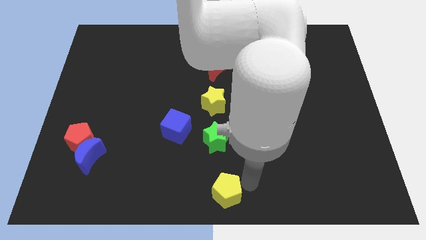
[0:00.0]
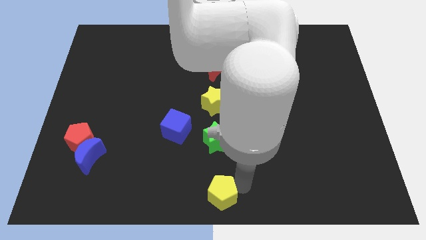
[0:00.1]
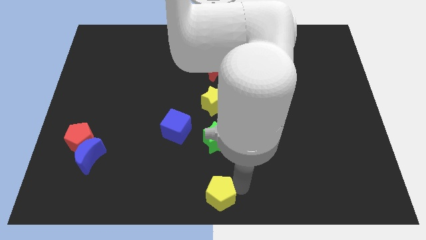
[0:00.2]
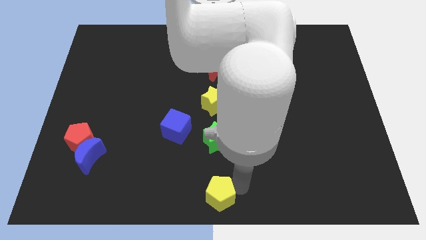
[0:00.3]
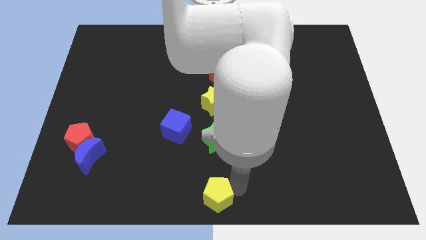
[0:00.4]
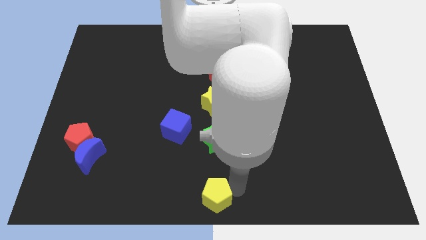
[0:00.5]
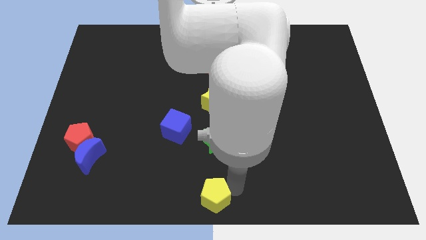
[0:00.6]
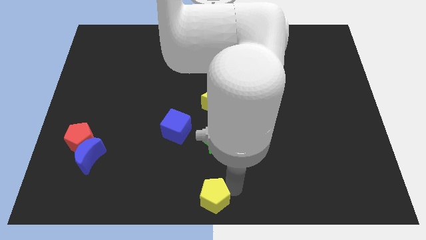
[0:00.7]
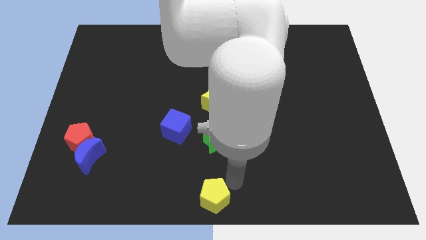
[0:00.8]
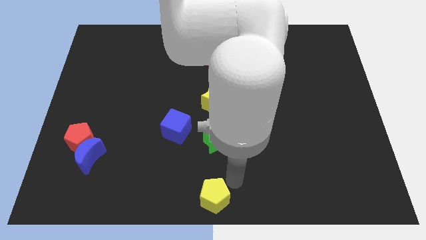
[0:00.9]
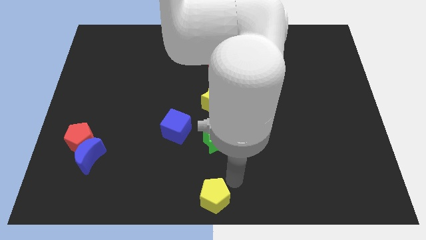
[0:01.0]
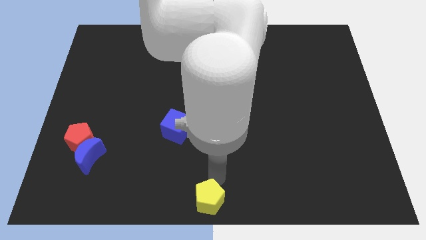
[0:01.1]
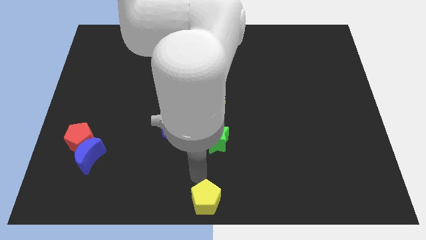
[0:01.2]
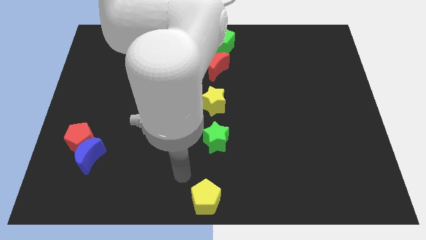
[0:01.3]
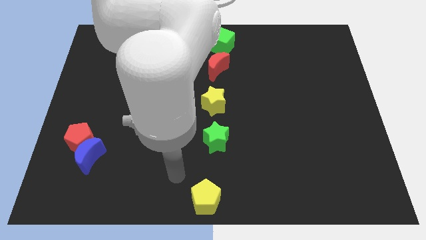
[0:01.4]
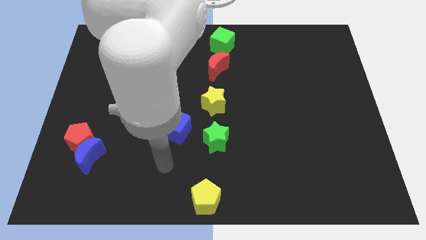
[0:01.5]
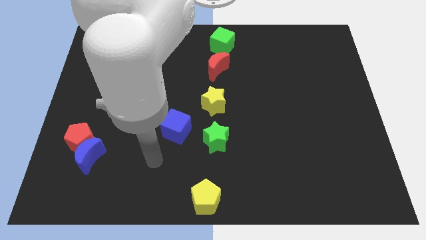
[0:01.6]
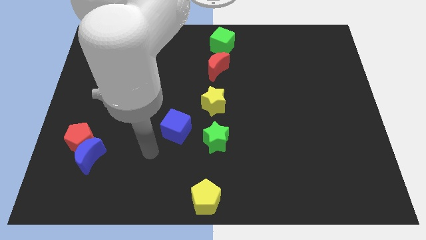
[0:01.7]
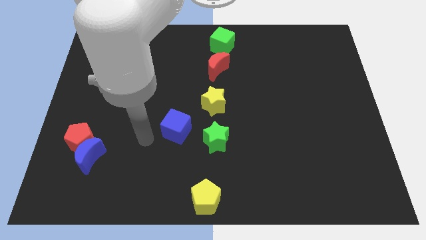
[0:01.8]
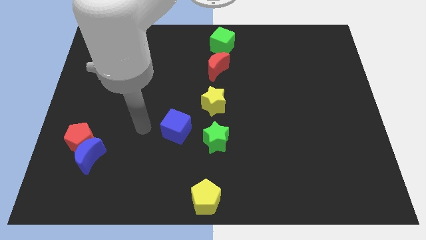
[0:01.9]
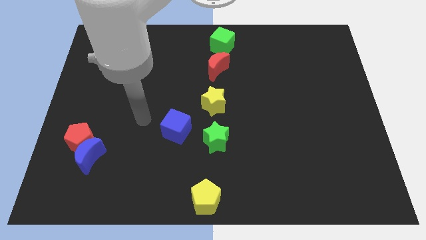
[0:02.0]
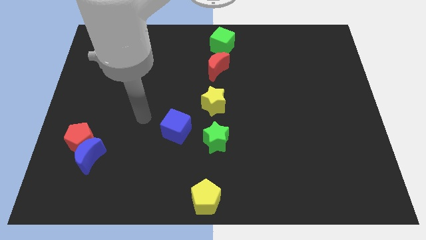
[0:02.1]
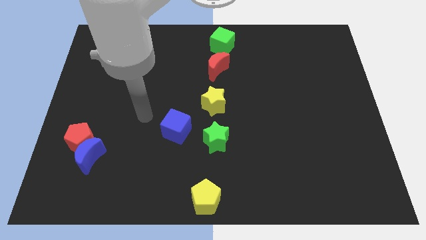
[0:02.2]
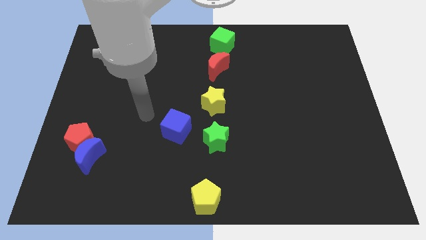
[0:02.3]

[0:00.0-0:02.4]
move your arm away from yellow pentagon

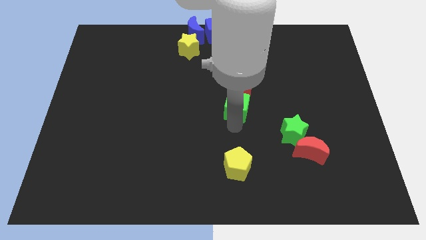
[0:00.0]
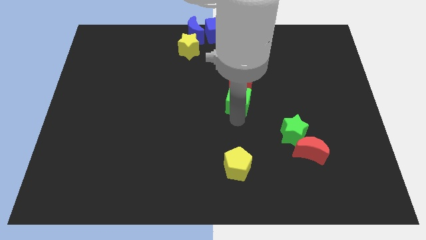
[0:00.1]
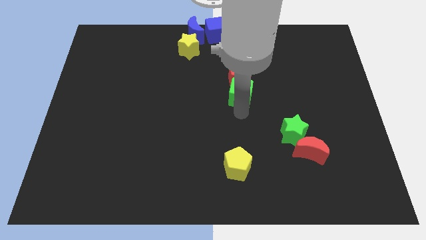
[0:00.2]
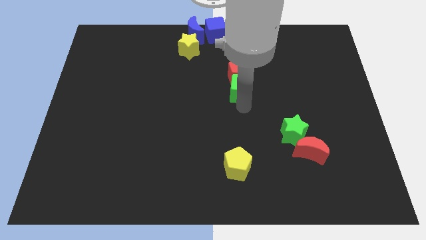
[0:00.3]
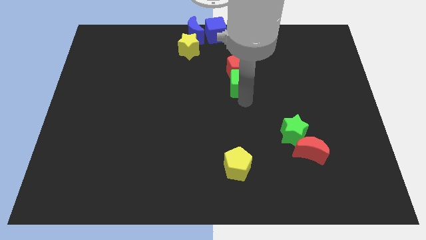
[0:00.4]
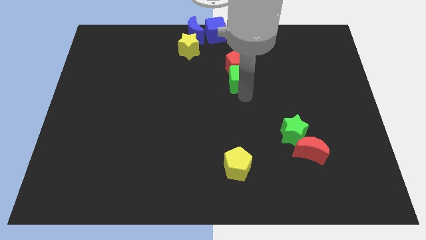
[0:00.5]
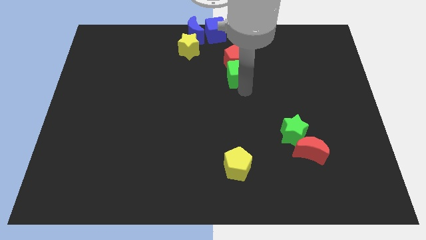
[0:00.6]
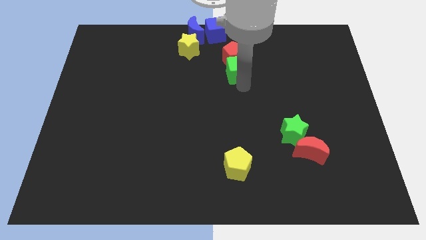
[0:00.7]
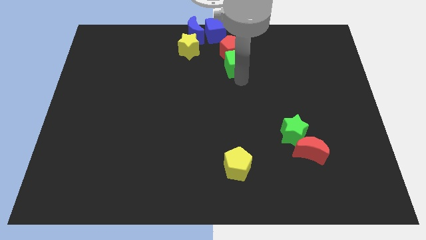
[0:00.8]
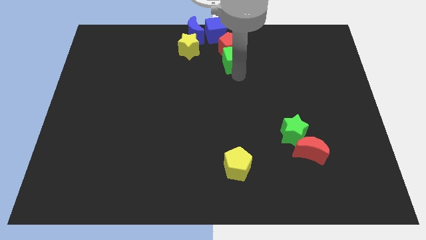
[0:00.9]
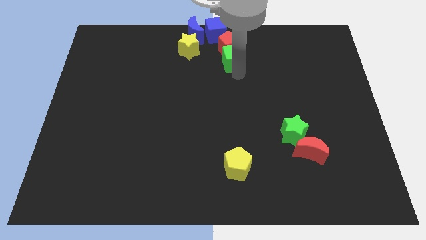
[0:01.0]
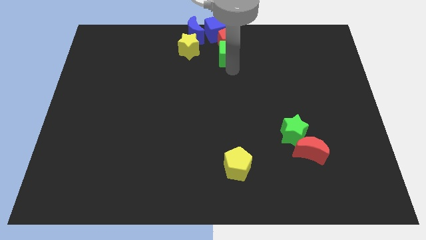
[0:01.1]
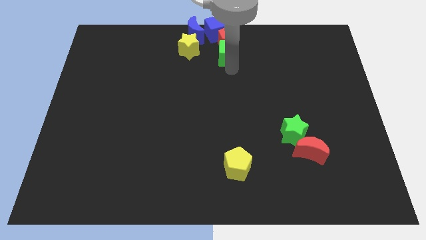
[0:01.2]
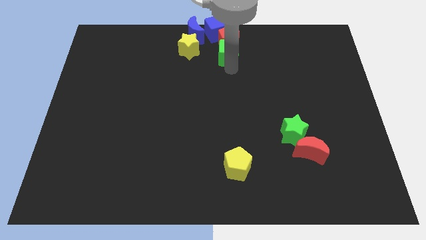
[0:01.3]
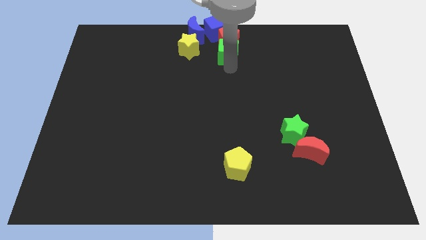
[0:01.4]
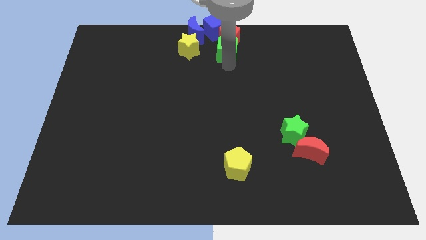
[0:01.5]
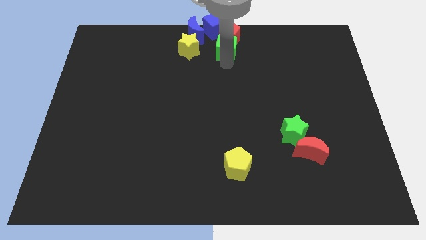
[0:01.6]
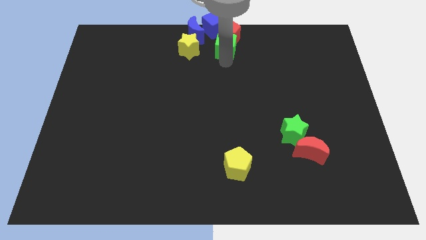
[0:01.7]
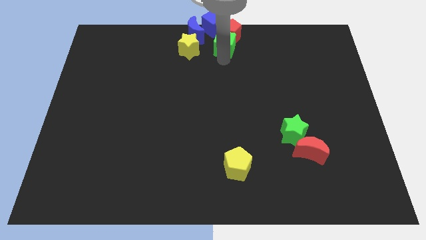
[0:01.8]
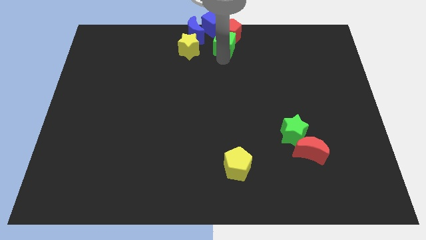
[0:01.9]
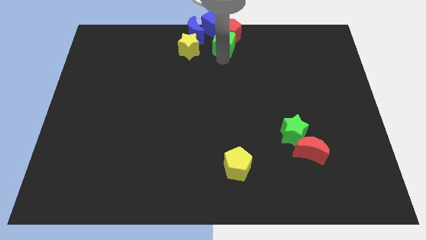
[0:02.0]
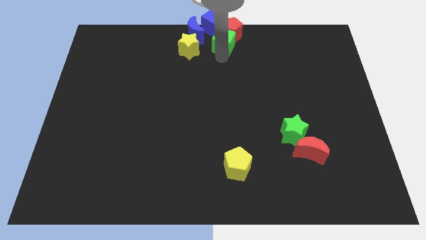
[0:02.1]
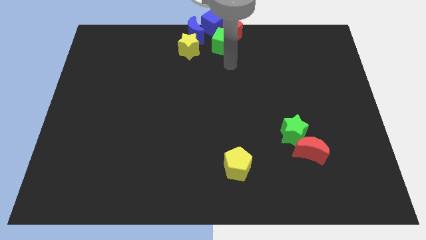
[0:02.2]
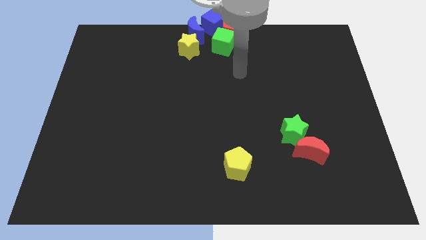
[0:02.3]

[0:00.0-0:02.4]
push the red pentagon to the top center of the board using the green cube

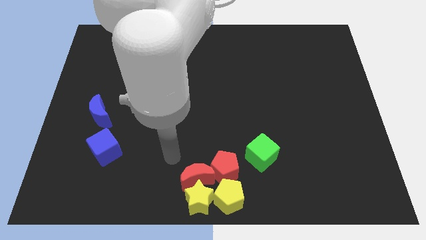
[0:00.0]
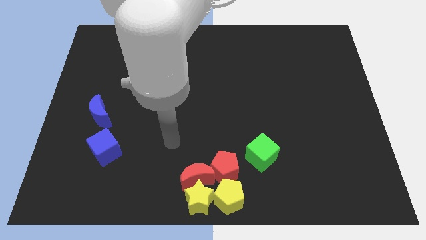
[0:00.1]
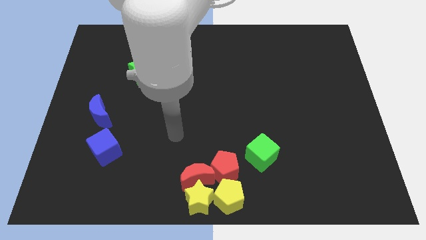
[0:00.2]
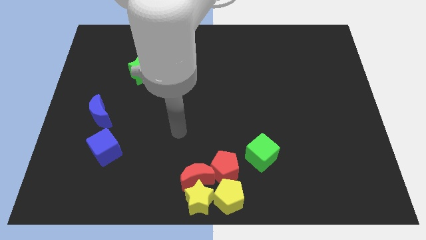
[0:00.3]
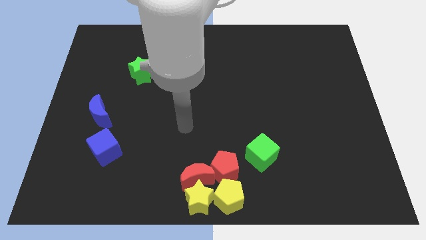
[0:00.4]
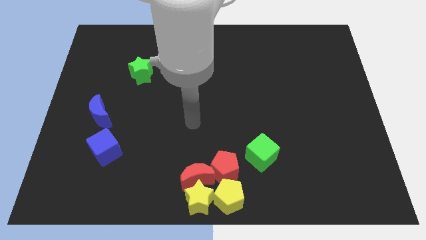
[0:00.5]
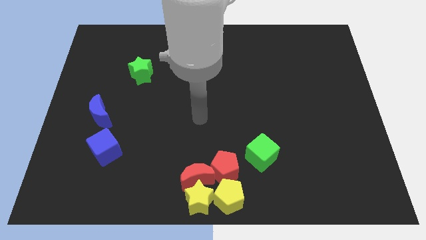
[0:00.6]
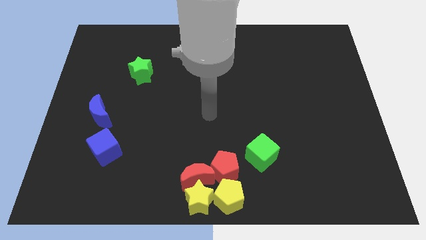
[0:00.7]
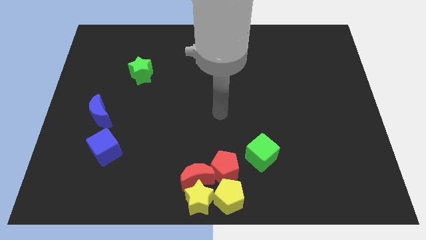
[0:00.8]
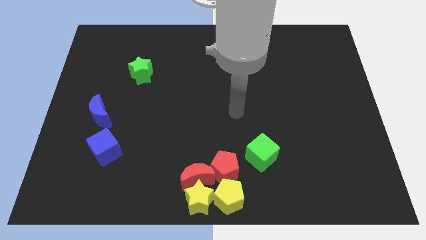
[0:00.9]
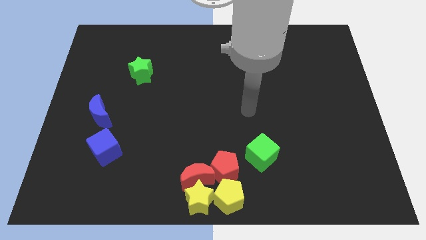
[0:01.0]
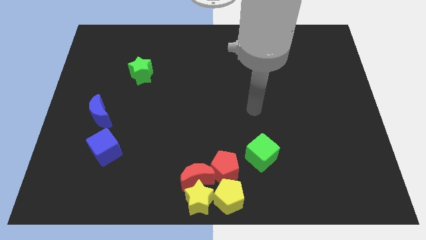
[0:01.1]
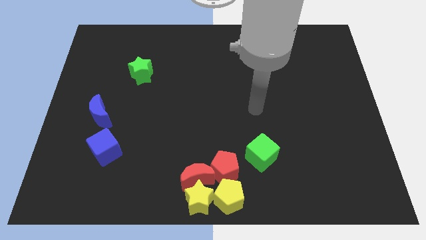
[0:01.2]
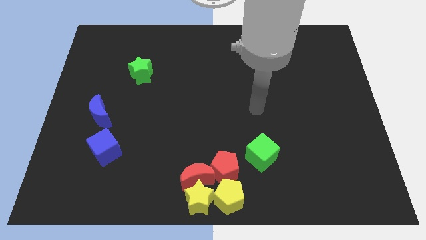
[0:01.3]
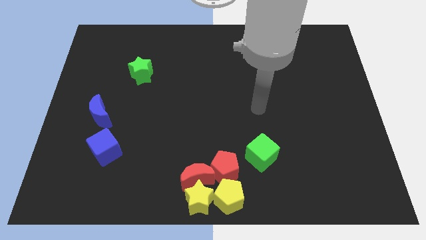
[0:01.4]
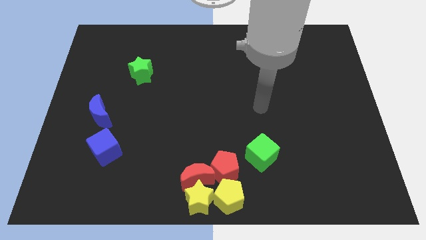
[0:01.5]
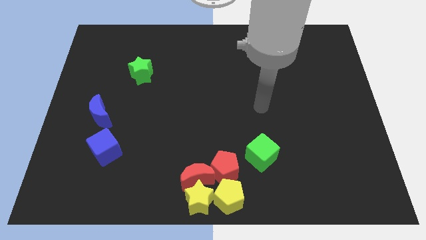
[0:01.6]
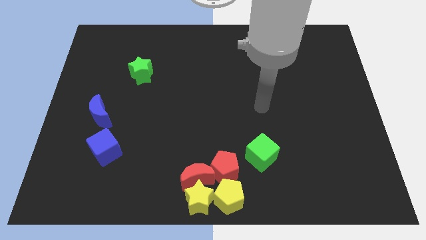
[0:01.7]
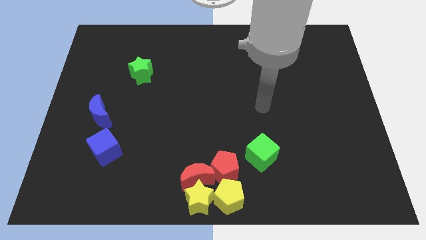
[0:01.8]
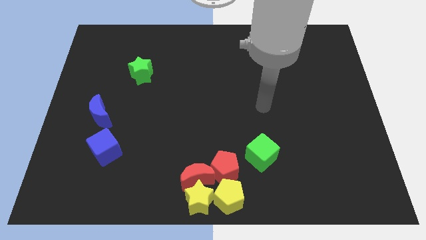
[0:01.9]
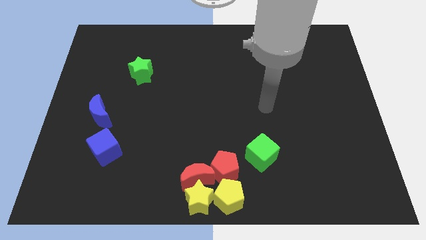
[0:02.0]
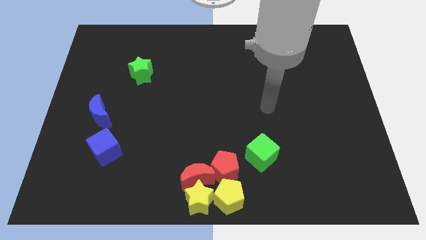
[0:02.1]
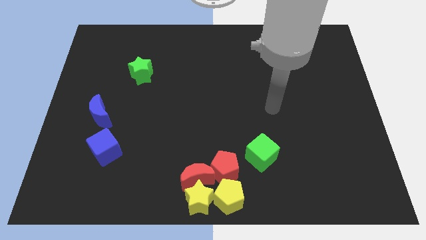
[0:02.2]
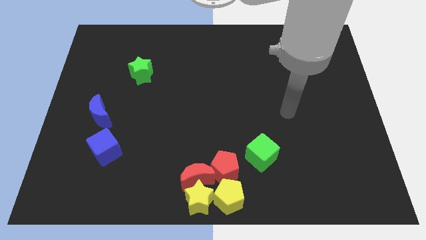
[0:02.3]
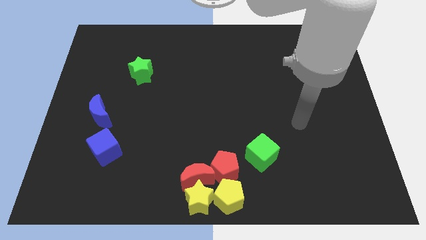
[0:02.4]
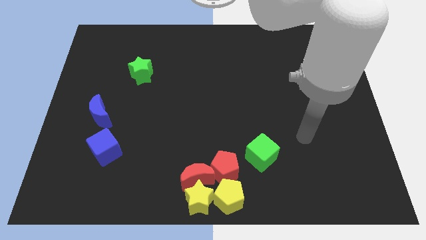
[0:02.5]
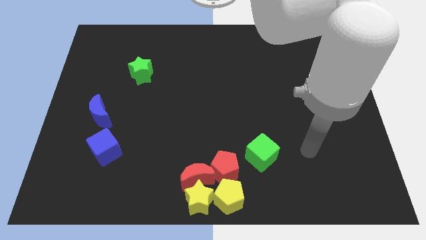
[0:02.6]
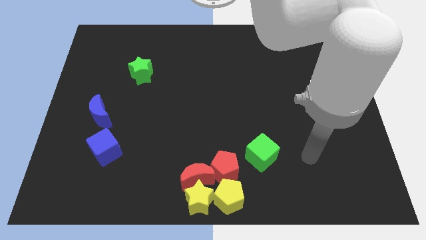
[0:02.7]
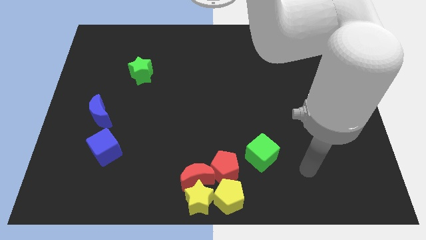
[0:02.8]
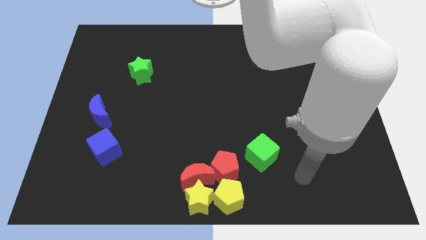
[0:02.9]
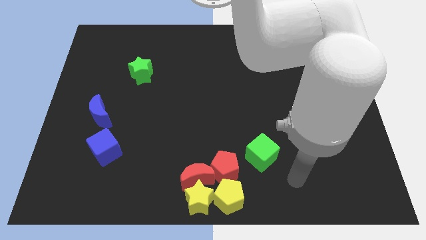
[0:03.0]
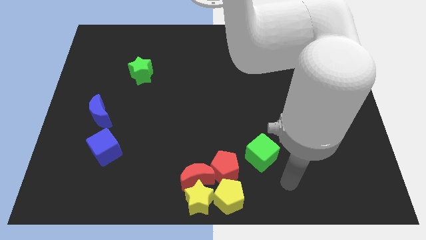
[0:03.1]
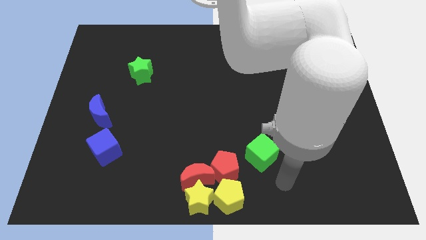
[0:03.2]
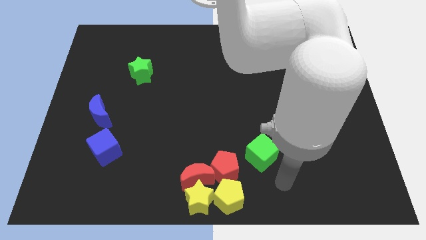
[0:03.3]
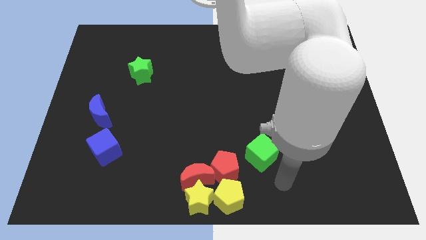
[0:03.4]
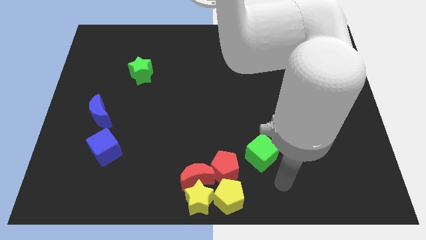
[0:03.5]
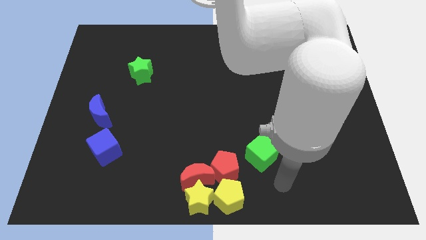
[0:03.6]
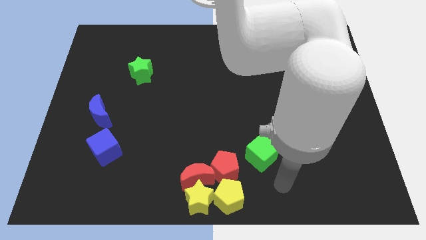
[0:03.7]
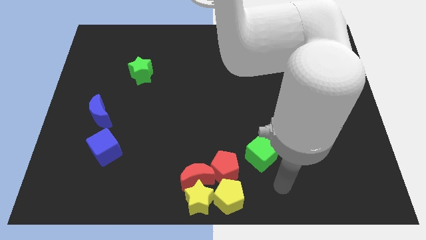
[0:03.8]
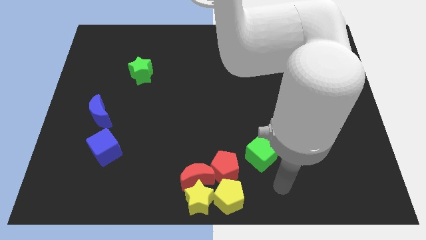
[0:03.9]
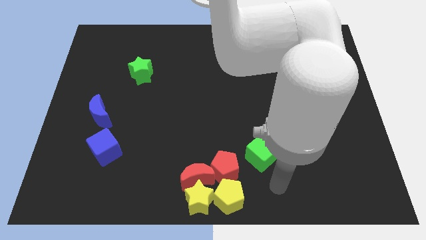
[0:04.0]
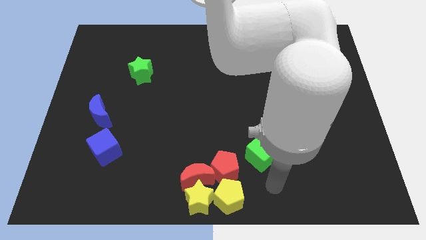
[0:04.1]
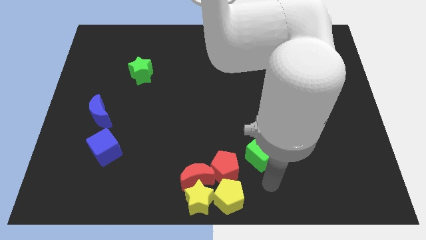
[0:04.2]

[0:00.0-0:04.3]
move the arm towards the bottom of the green cube
